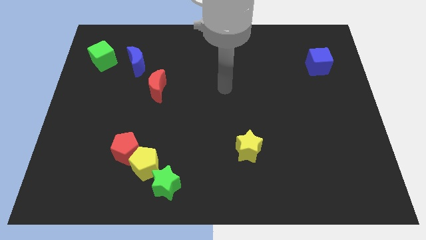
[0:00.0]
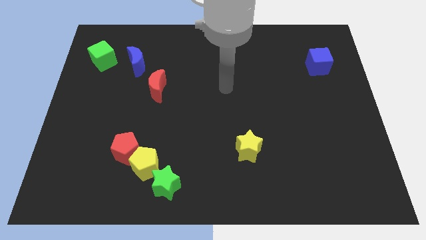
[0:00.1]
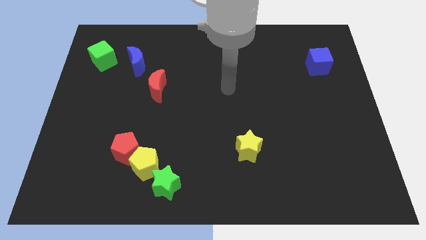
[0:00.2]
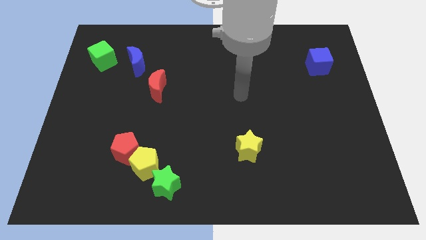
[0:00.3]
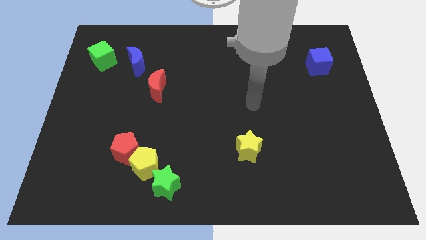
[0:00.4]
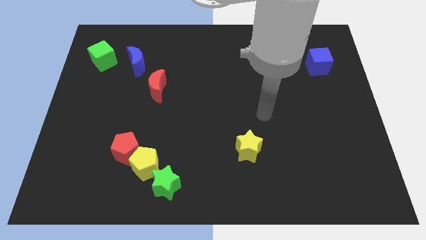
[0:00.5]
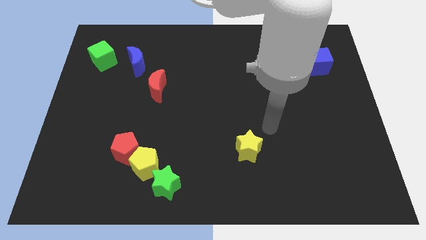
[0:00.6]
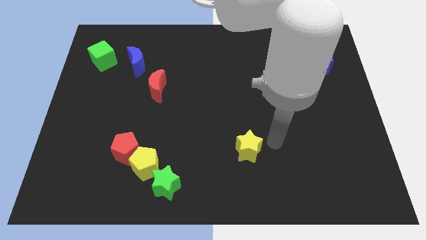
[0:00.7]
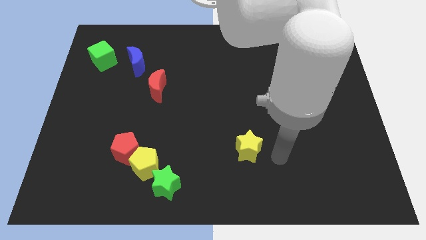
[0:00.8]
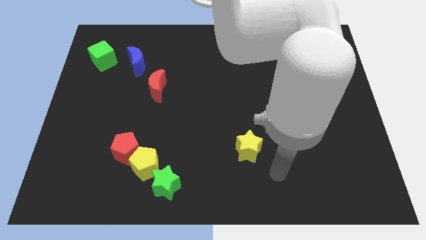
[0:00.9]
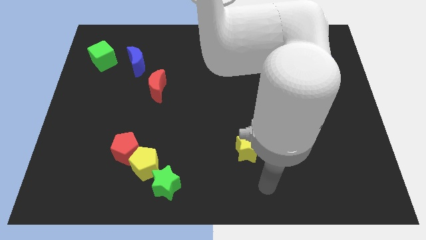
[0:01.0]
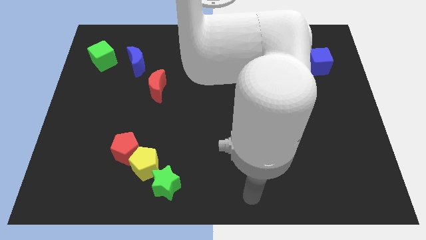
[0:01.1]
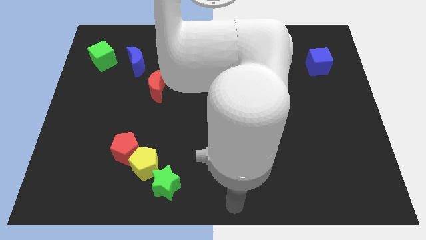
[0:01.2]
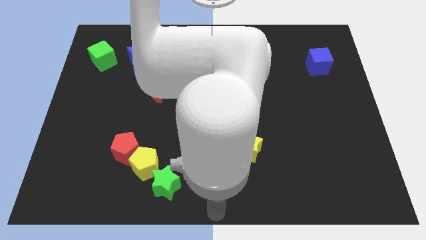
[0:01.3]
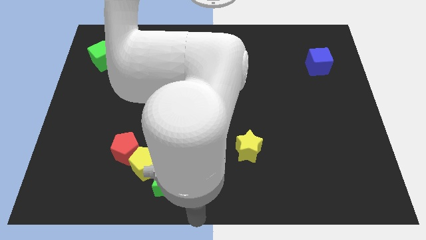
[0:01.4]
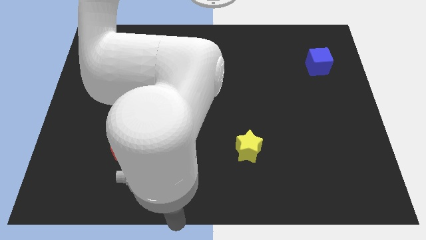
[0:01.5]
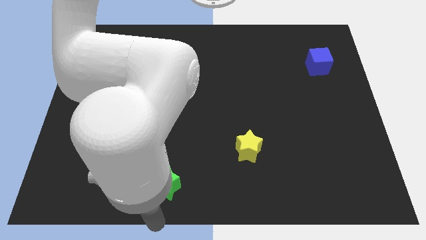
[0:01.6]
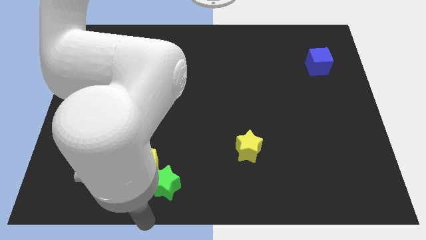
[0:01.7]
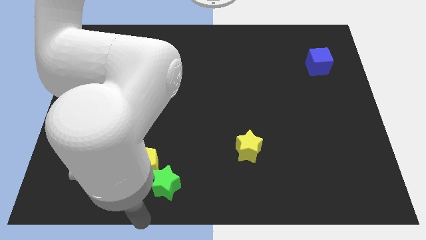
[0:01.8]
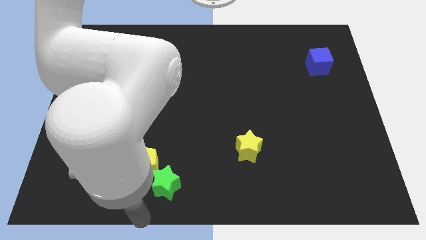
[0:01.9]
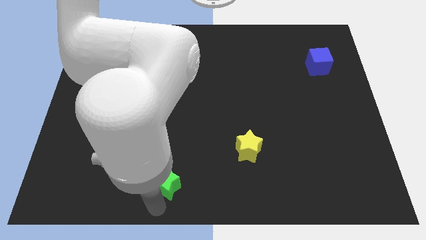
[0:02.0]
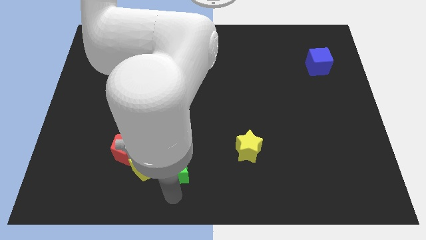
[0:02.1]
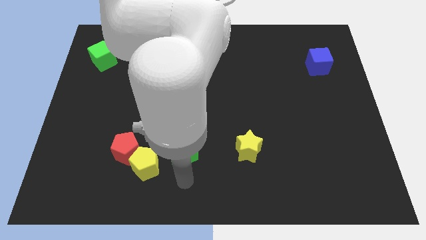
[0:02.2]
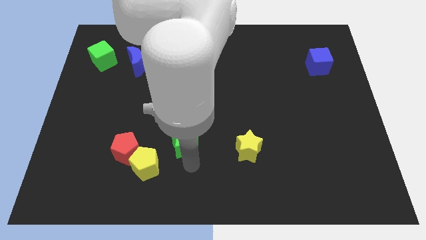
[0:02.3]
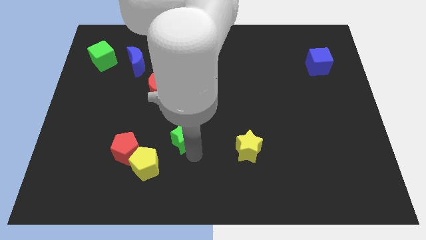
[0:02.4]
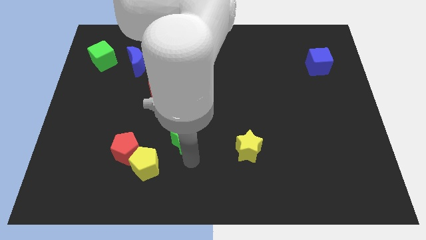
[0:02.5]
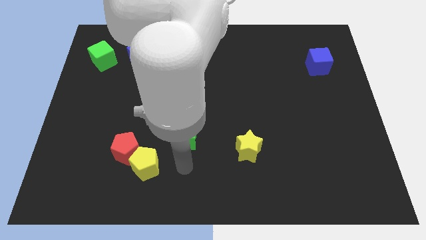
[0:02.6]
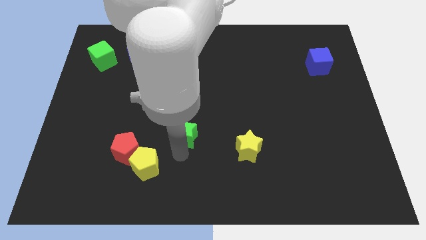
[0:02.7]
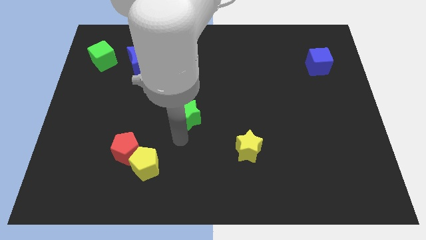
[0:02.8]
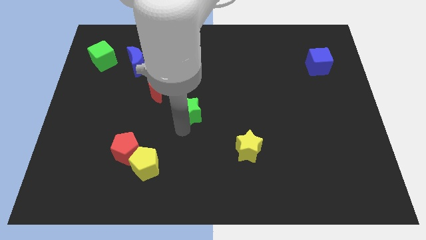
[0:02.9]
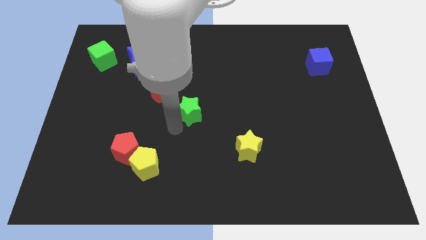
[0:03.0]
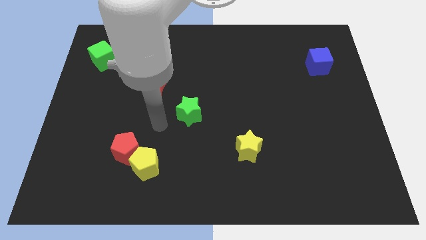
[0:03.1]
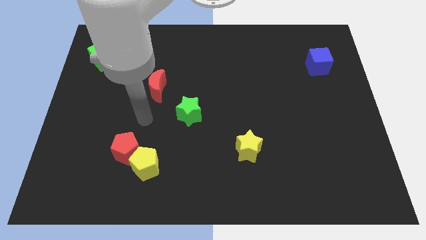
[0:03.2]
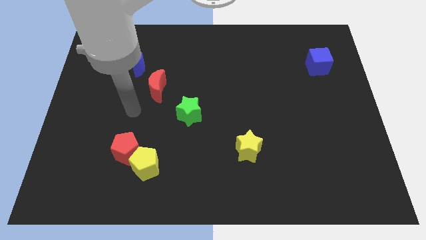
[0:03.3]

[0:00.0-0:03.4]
place the green star in between the red moon and yellow star

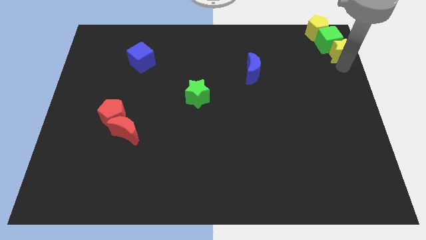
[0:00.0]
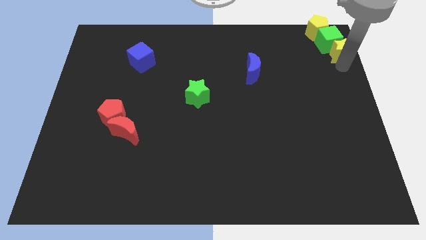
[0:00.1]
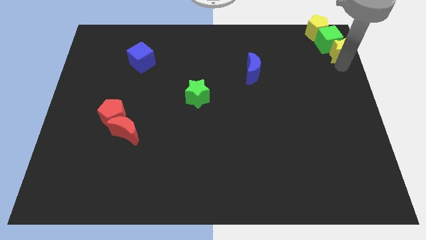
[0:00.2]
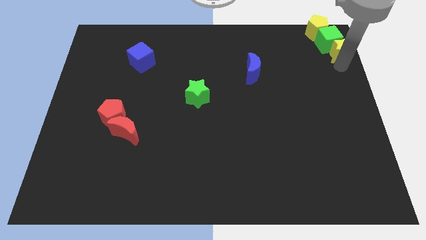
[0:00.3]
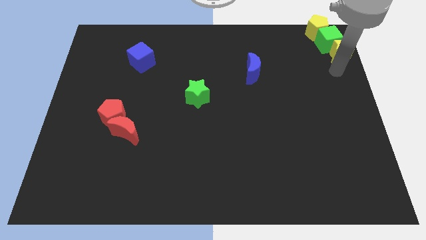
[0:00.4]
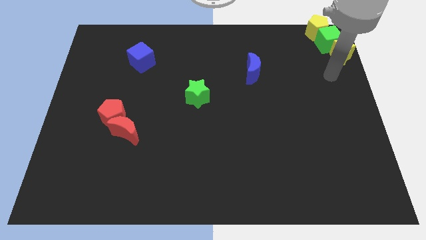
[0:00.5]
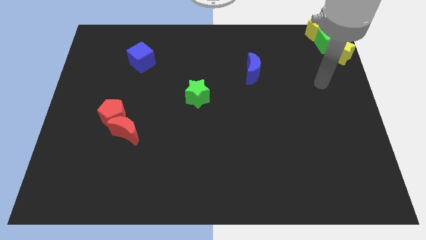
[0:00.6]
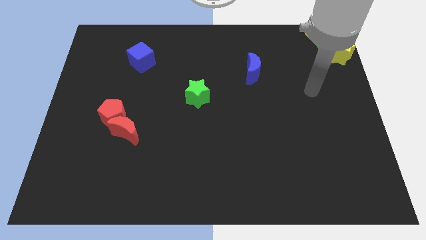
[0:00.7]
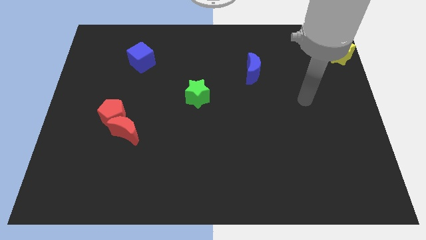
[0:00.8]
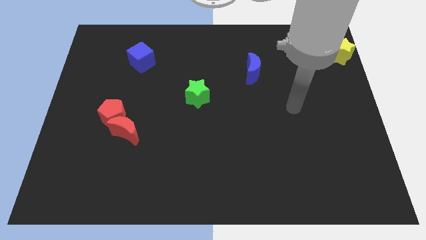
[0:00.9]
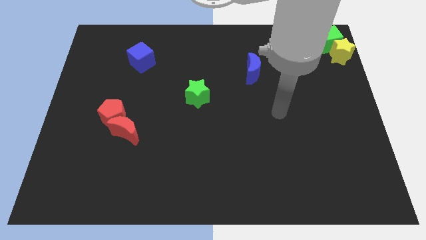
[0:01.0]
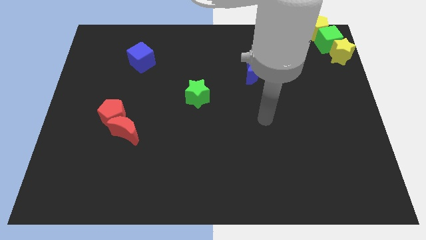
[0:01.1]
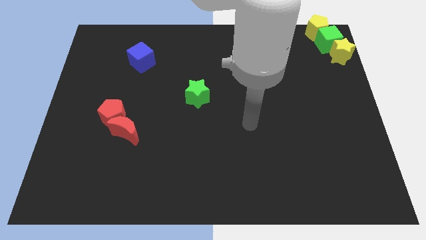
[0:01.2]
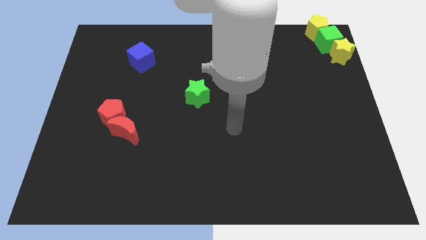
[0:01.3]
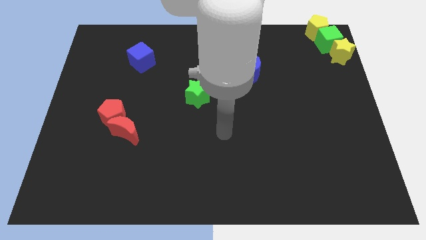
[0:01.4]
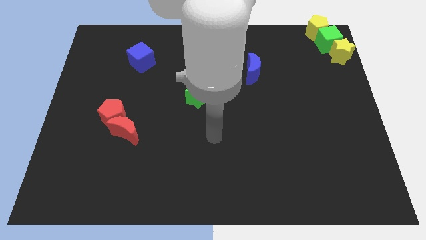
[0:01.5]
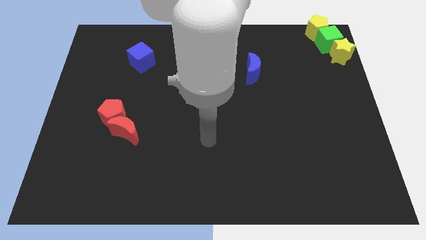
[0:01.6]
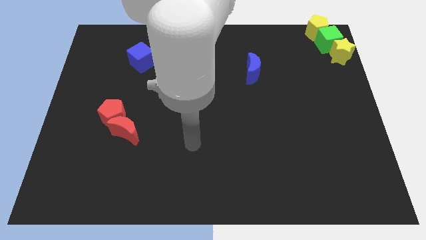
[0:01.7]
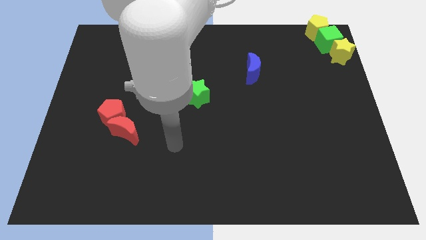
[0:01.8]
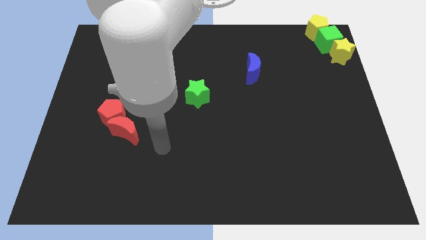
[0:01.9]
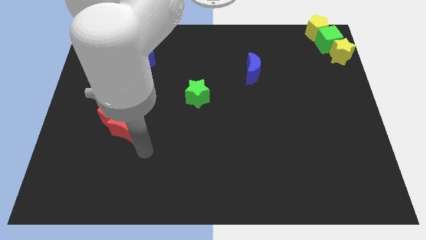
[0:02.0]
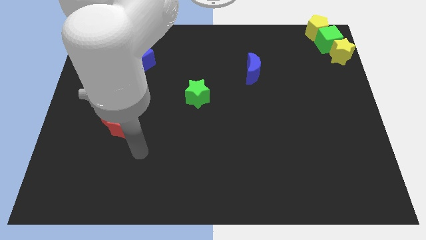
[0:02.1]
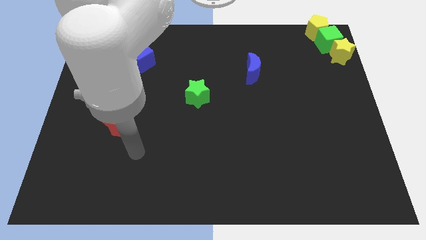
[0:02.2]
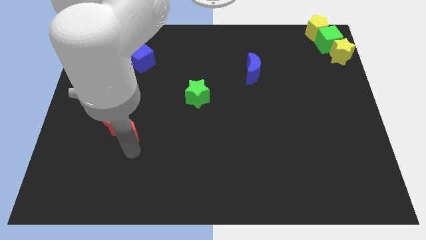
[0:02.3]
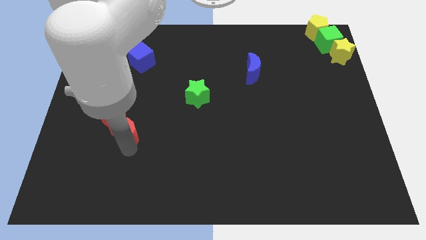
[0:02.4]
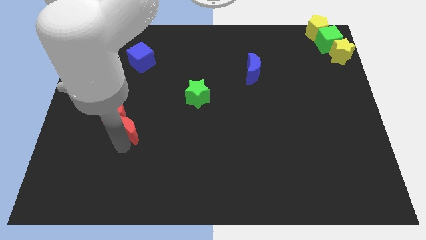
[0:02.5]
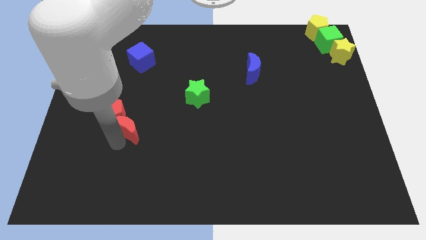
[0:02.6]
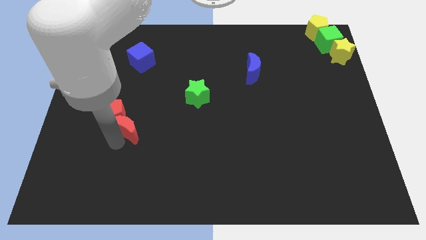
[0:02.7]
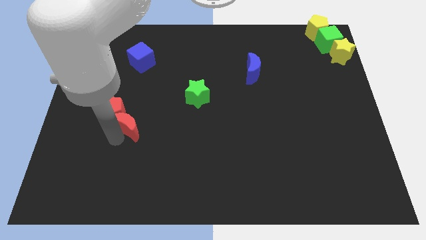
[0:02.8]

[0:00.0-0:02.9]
move the arm closer to the red crescent

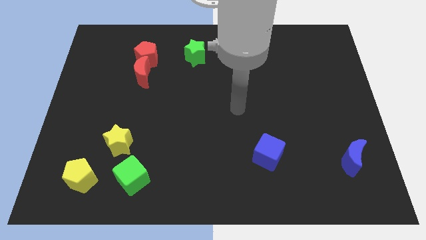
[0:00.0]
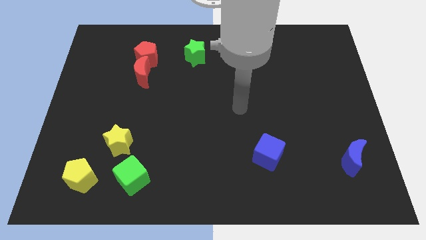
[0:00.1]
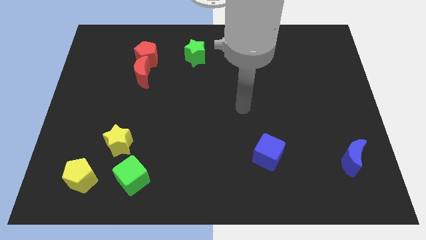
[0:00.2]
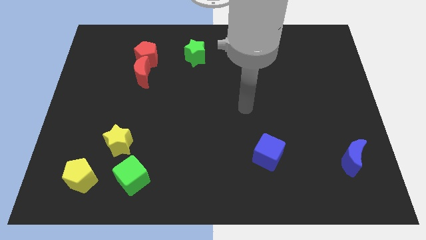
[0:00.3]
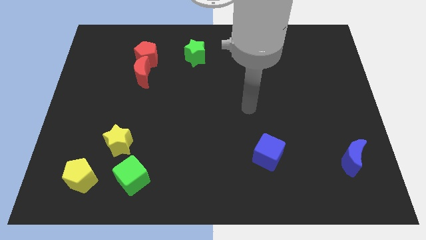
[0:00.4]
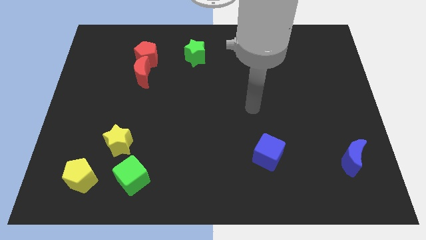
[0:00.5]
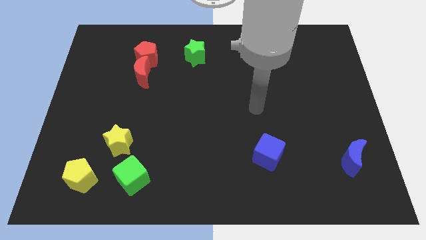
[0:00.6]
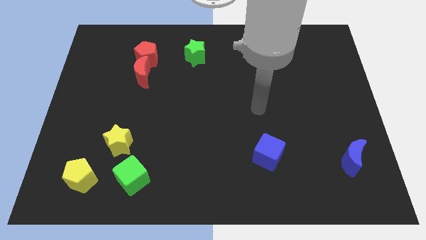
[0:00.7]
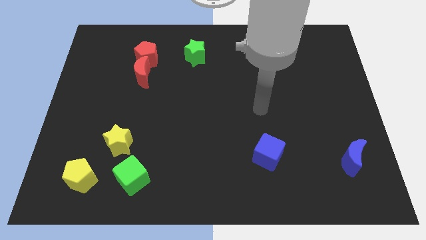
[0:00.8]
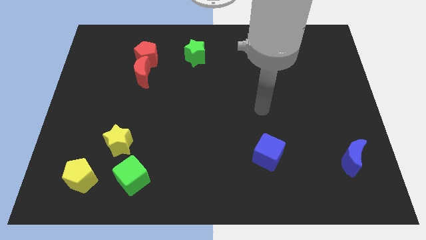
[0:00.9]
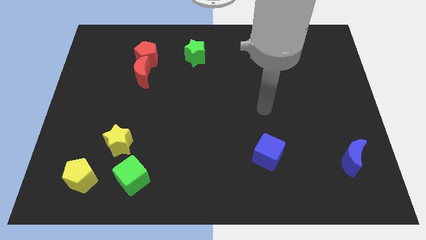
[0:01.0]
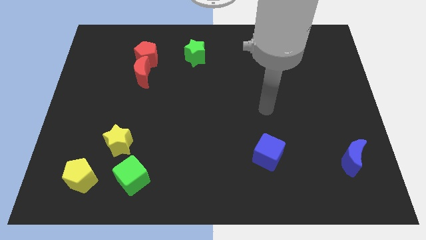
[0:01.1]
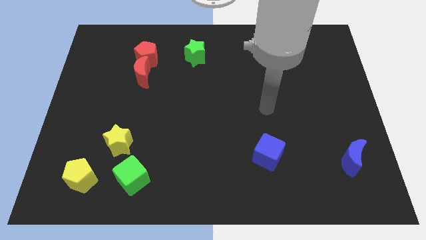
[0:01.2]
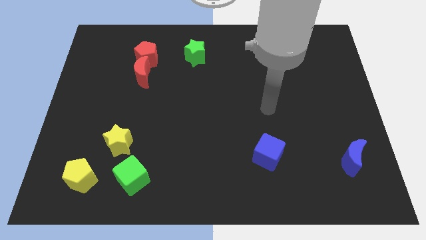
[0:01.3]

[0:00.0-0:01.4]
point yourself above the blue cube

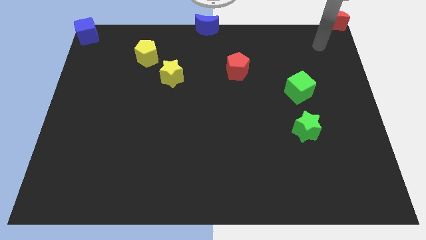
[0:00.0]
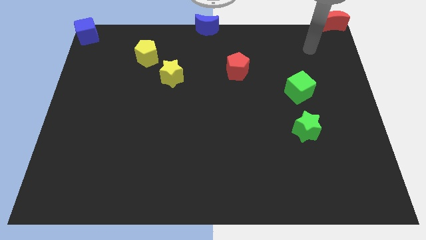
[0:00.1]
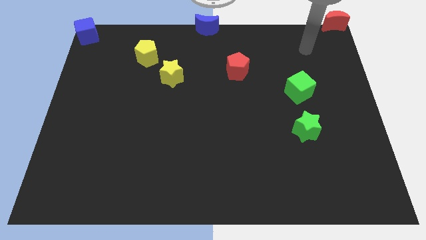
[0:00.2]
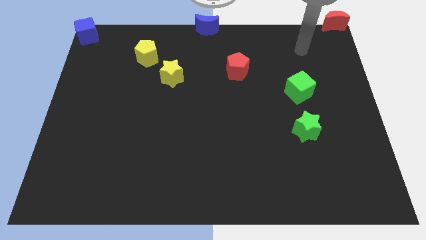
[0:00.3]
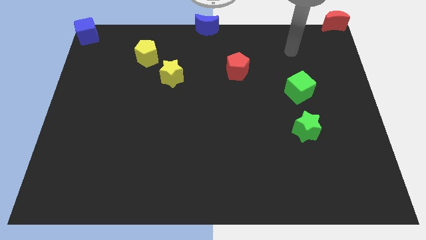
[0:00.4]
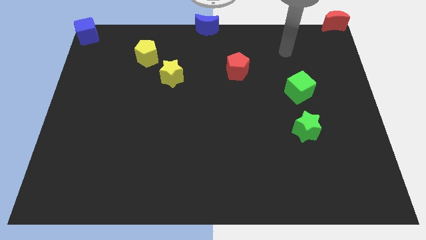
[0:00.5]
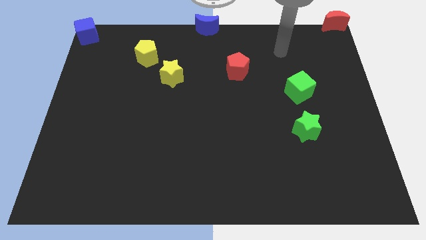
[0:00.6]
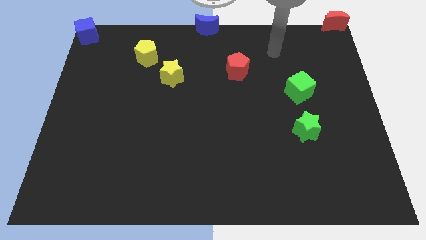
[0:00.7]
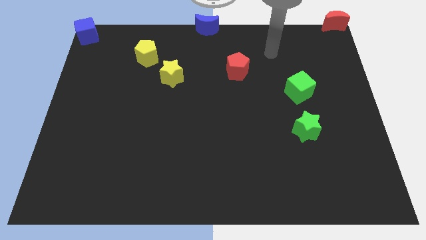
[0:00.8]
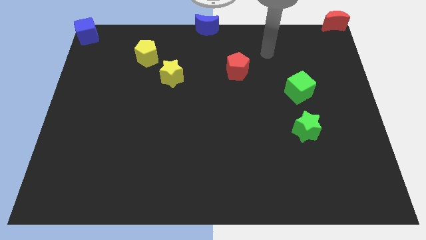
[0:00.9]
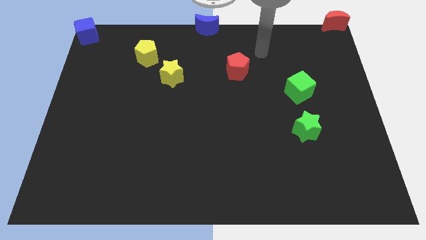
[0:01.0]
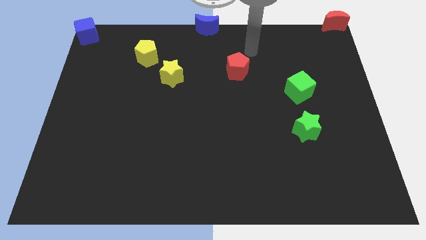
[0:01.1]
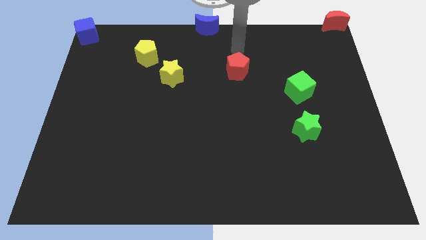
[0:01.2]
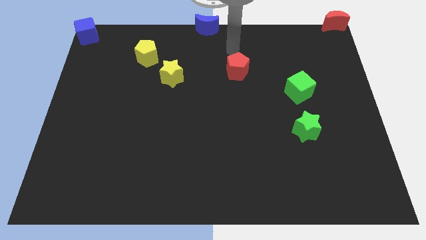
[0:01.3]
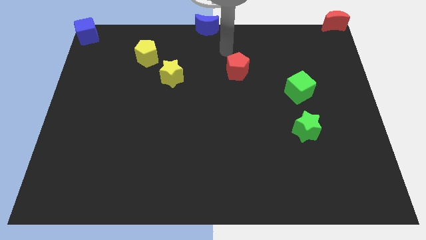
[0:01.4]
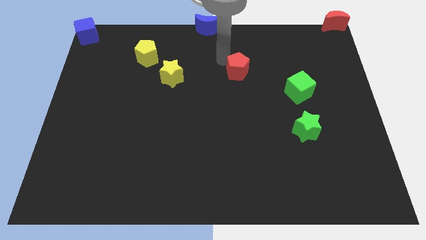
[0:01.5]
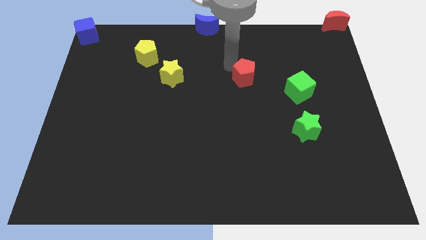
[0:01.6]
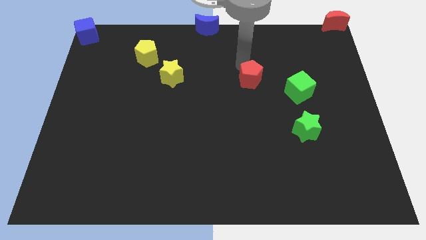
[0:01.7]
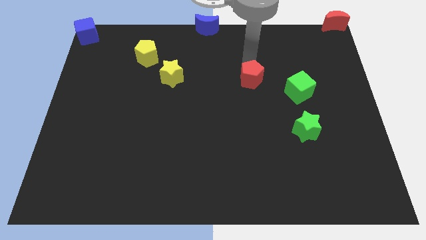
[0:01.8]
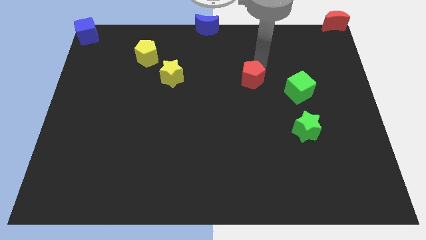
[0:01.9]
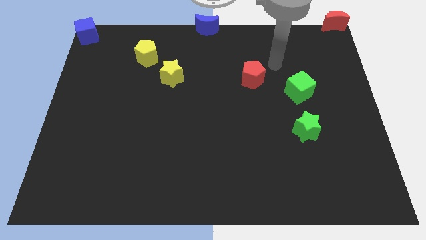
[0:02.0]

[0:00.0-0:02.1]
slightly move the red pentagon
